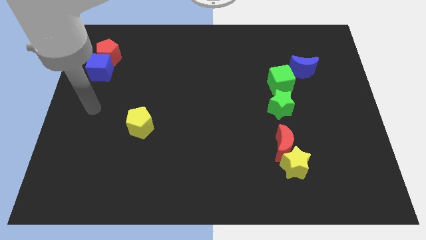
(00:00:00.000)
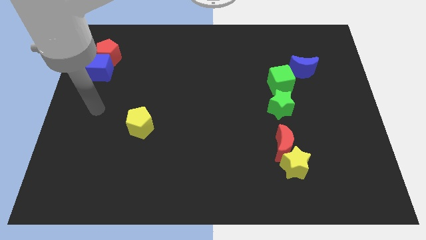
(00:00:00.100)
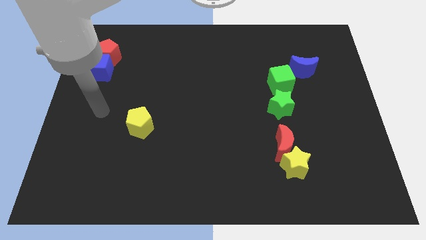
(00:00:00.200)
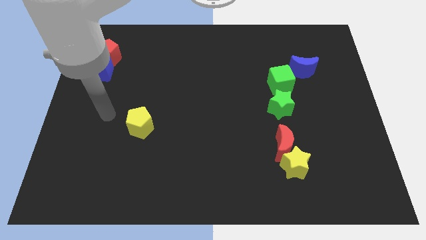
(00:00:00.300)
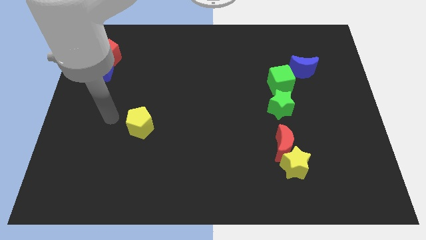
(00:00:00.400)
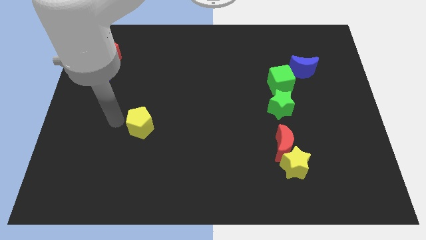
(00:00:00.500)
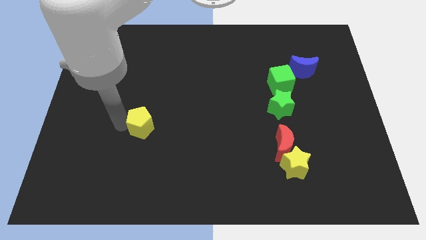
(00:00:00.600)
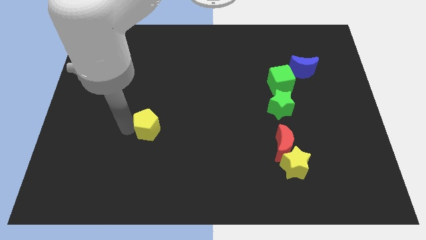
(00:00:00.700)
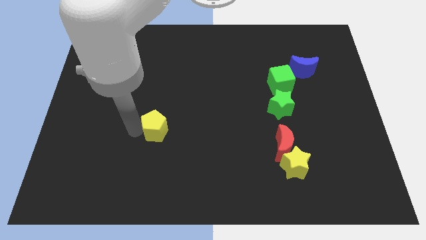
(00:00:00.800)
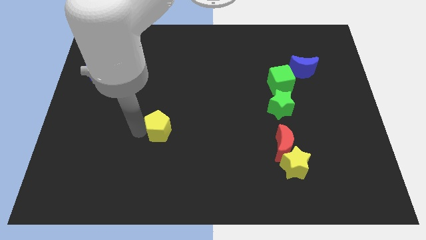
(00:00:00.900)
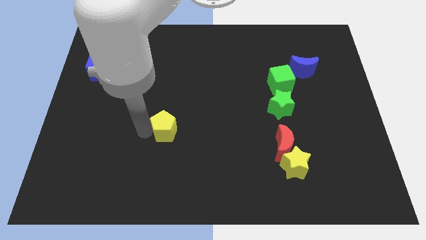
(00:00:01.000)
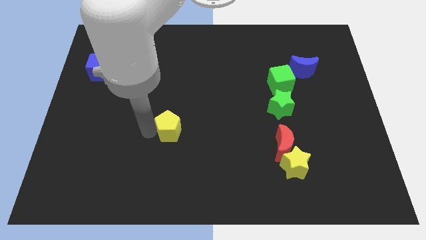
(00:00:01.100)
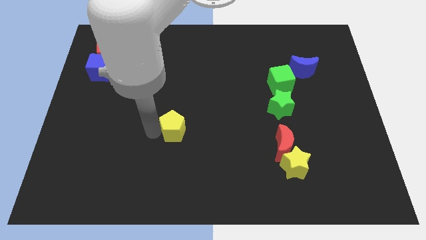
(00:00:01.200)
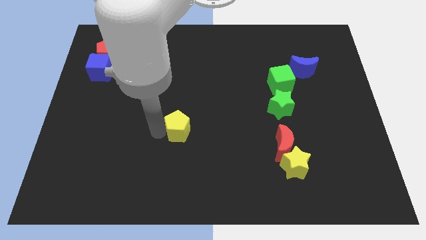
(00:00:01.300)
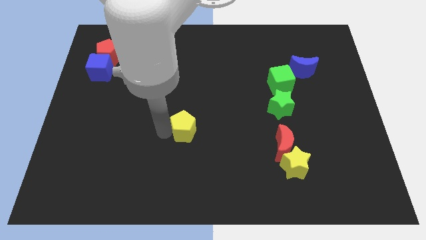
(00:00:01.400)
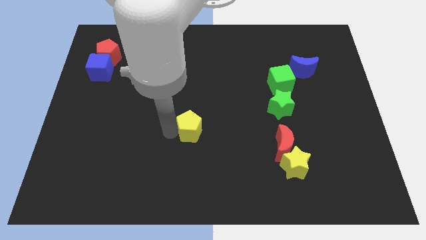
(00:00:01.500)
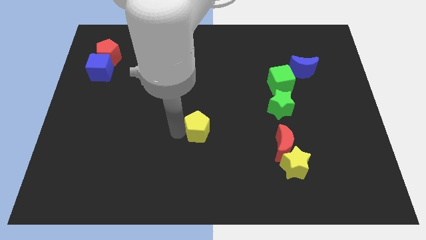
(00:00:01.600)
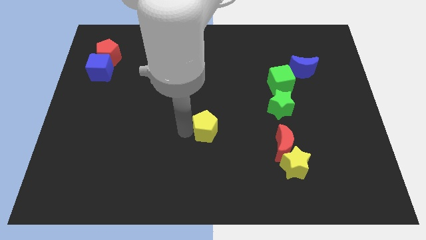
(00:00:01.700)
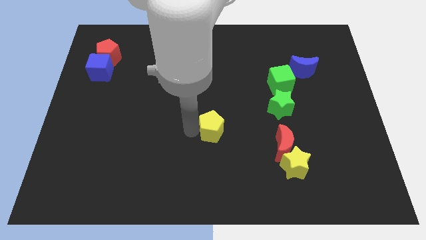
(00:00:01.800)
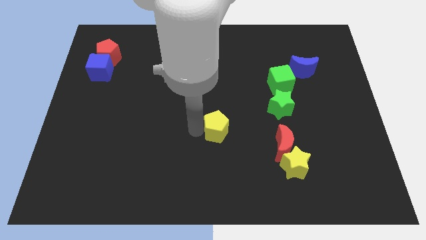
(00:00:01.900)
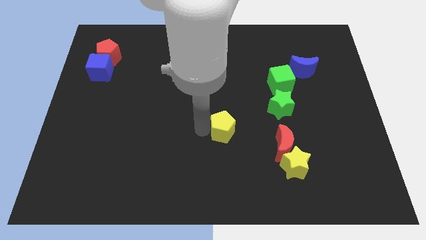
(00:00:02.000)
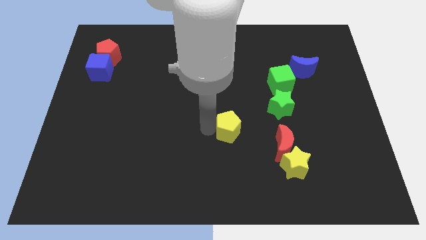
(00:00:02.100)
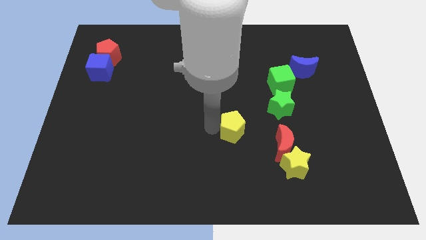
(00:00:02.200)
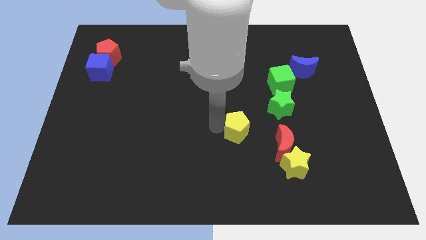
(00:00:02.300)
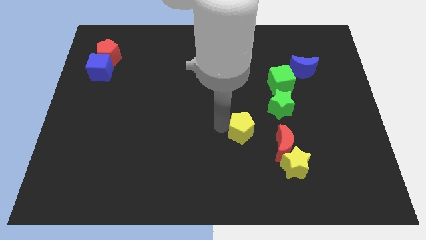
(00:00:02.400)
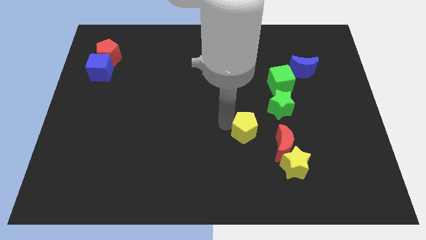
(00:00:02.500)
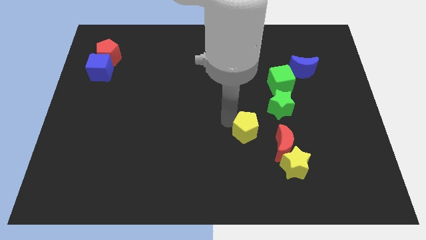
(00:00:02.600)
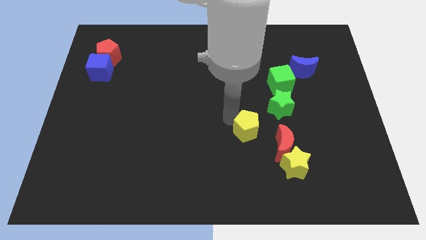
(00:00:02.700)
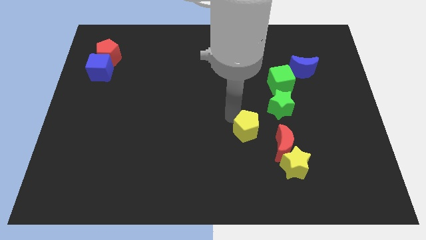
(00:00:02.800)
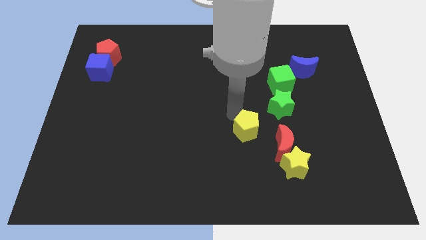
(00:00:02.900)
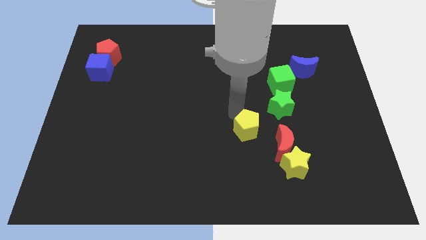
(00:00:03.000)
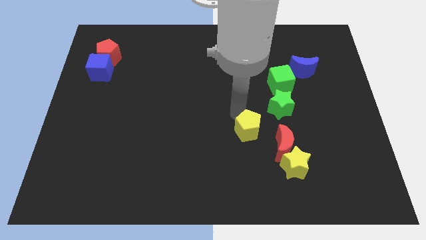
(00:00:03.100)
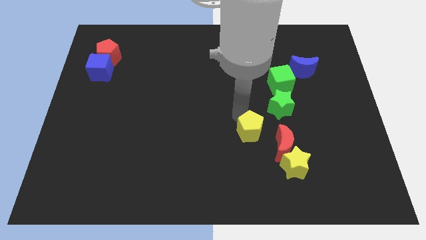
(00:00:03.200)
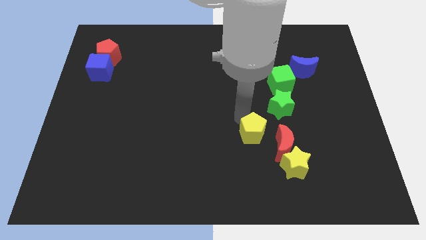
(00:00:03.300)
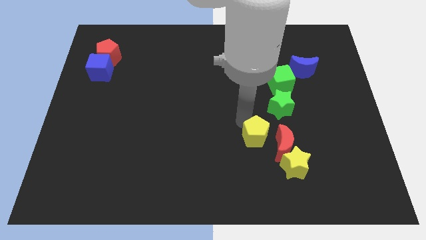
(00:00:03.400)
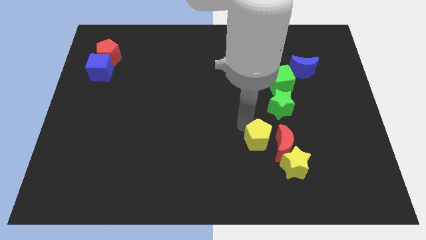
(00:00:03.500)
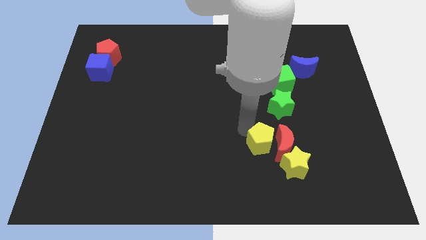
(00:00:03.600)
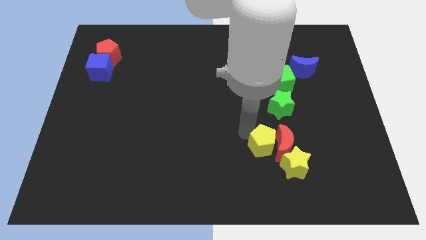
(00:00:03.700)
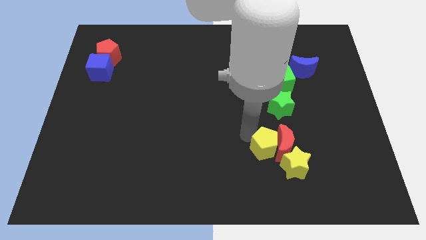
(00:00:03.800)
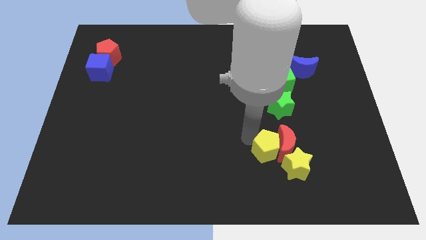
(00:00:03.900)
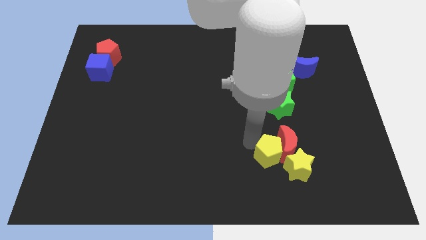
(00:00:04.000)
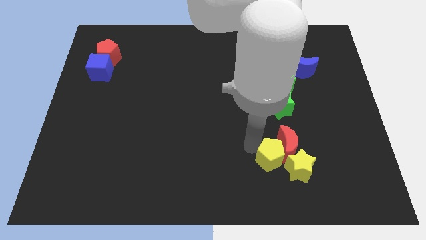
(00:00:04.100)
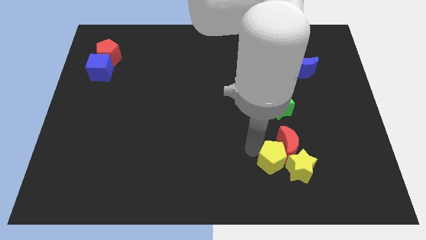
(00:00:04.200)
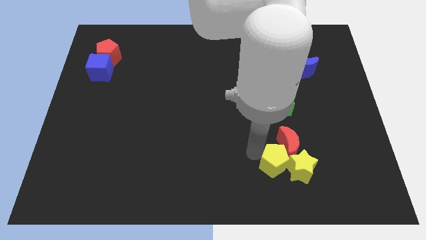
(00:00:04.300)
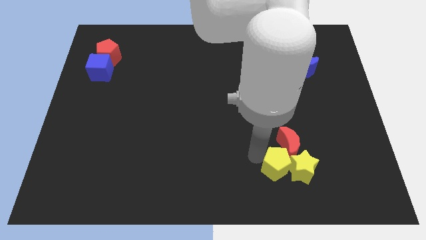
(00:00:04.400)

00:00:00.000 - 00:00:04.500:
push the yellow pentagon next to the yellow star

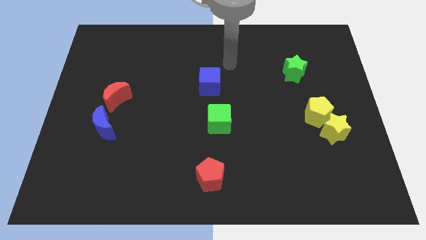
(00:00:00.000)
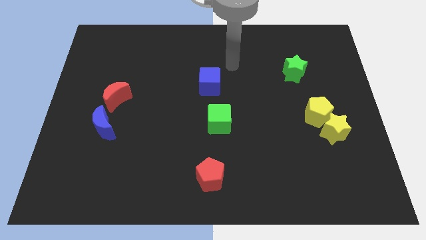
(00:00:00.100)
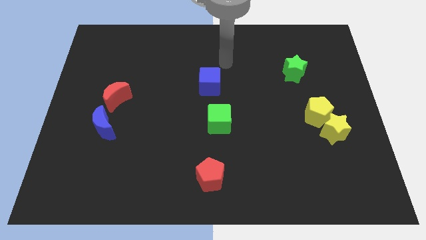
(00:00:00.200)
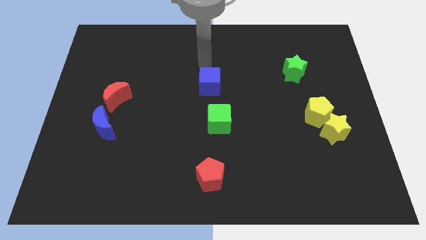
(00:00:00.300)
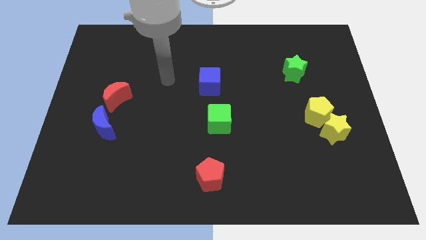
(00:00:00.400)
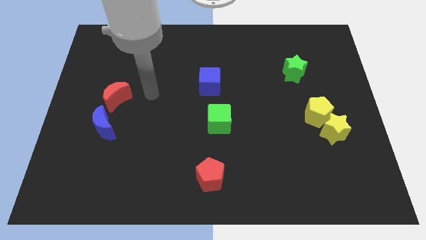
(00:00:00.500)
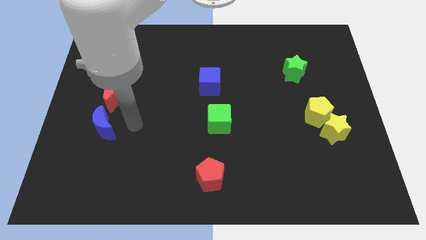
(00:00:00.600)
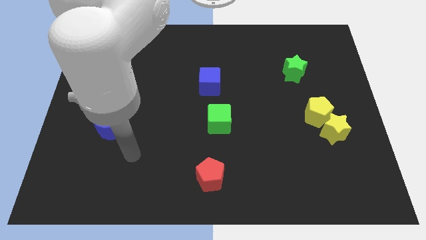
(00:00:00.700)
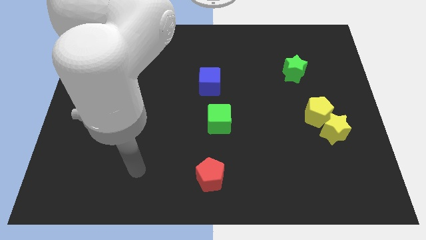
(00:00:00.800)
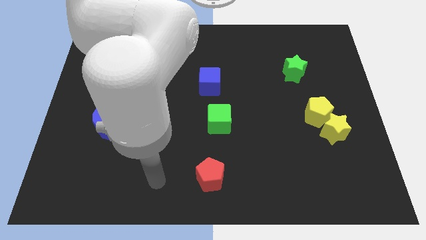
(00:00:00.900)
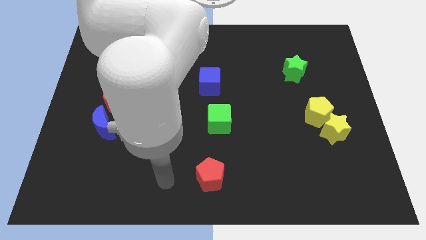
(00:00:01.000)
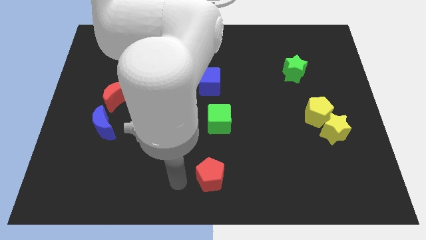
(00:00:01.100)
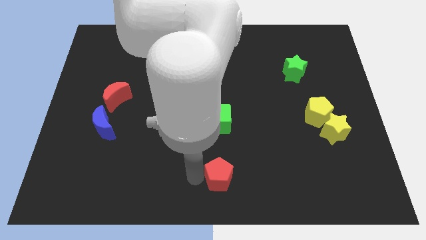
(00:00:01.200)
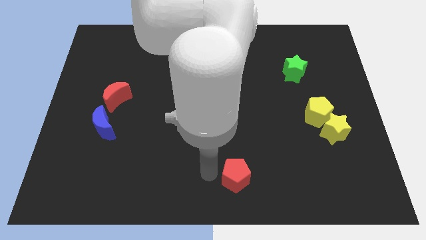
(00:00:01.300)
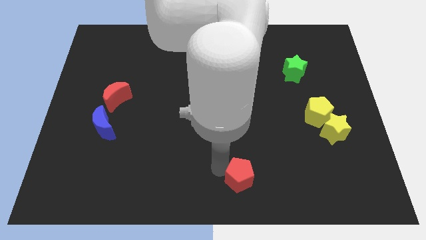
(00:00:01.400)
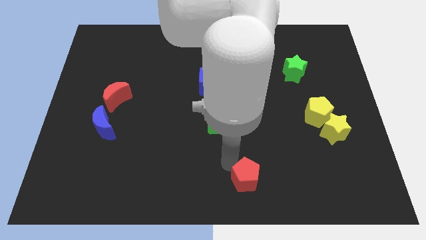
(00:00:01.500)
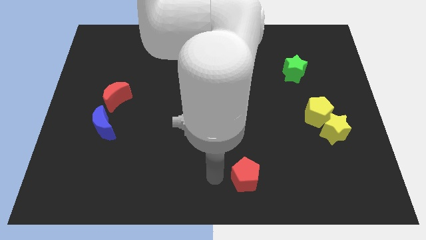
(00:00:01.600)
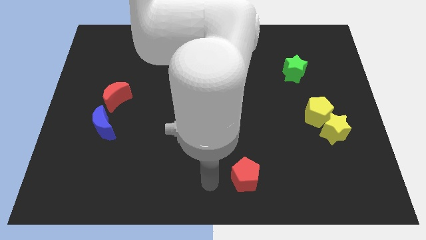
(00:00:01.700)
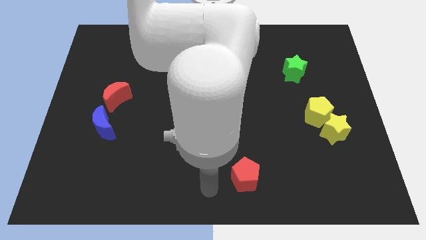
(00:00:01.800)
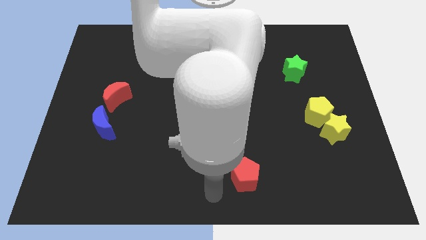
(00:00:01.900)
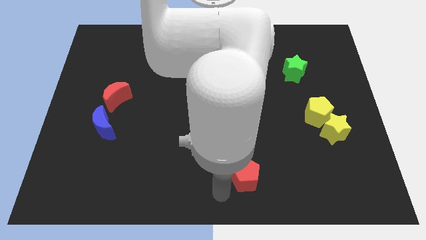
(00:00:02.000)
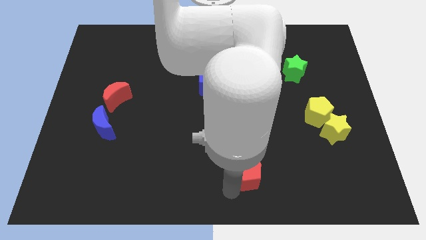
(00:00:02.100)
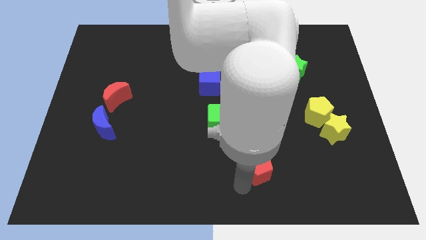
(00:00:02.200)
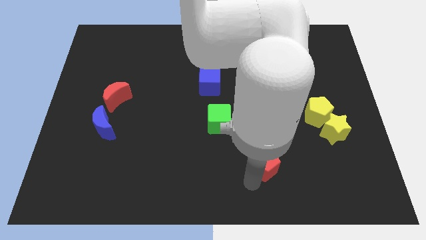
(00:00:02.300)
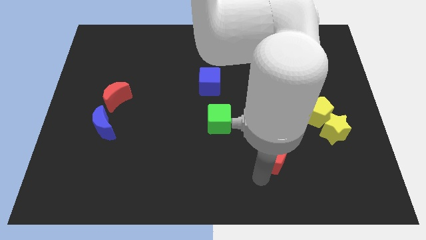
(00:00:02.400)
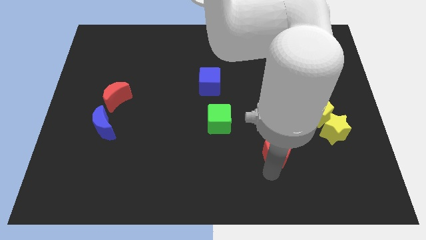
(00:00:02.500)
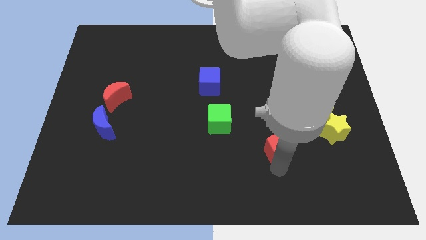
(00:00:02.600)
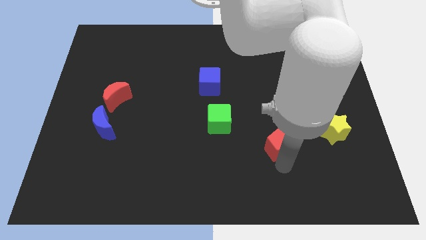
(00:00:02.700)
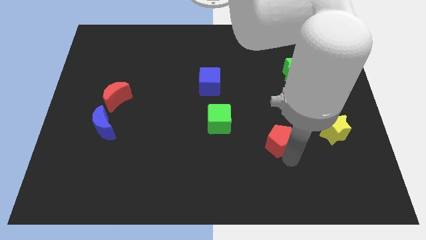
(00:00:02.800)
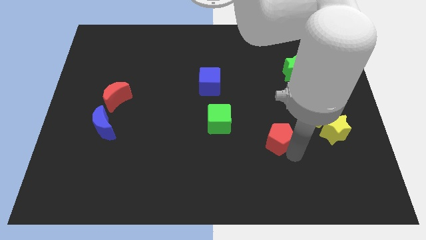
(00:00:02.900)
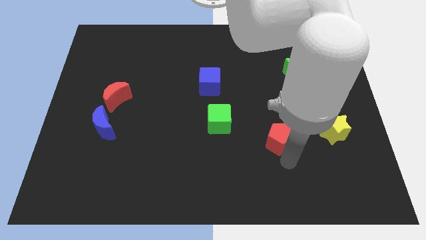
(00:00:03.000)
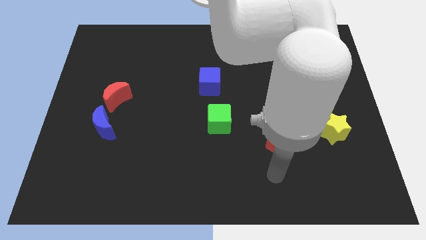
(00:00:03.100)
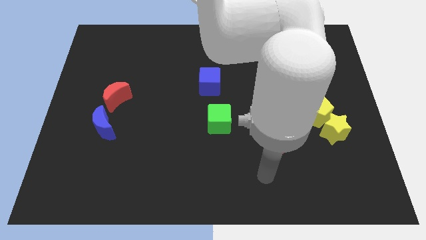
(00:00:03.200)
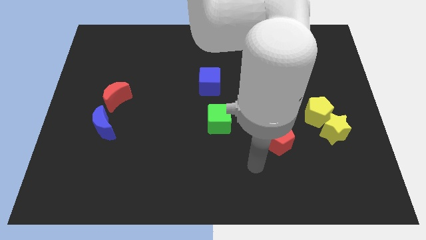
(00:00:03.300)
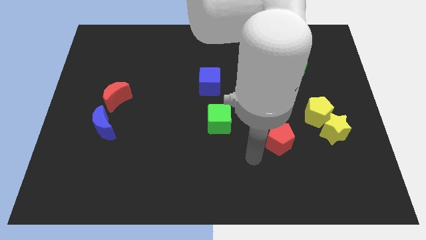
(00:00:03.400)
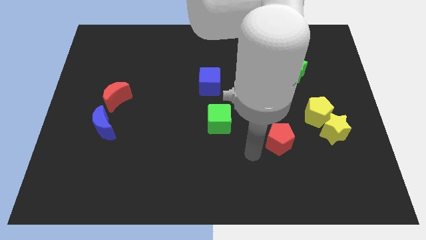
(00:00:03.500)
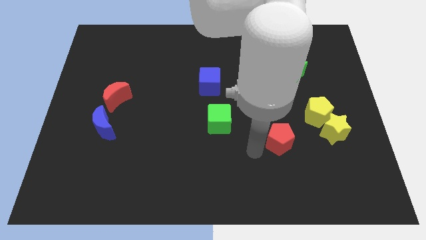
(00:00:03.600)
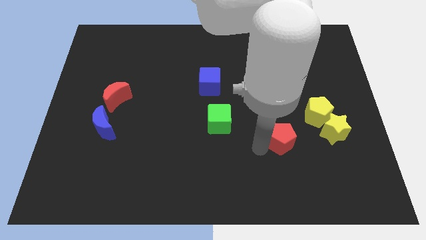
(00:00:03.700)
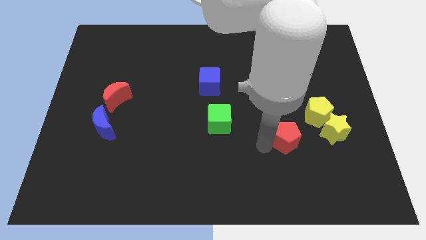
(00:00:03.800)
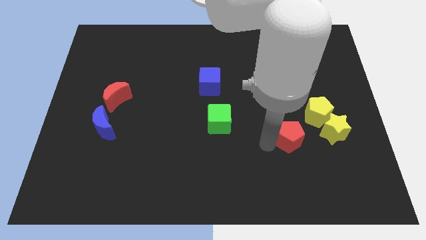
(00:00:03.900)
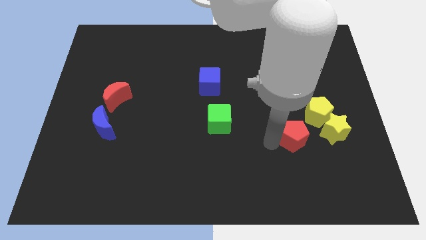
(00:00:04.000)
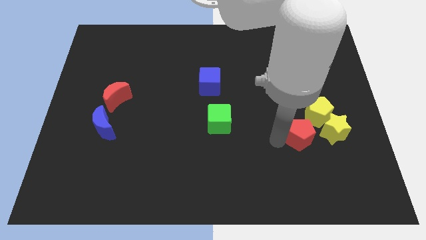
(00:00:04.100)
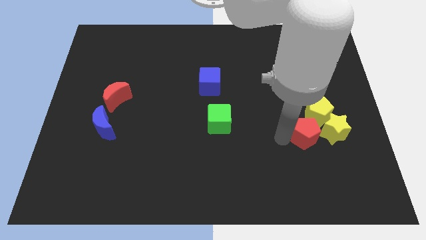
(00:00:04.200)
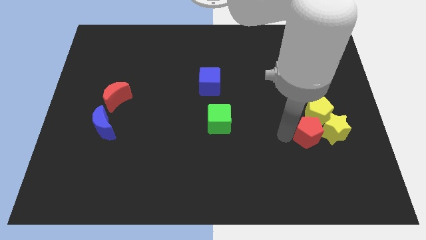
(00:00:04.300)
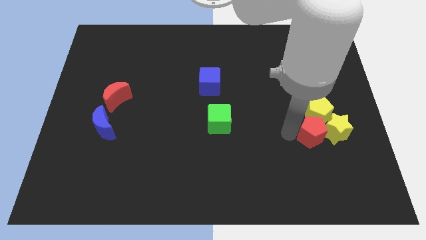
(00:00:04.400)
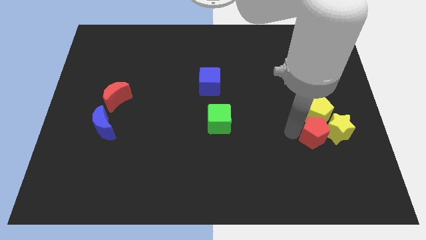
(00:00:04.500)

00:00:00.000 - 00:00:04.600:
move the red pentagon next to the yellow star
